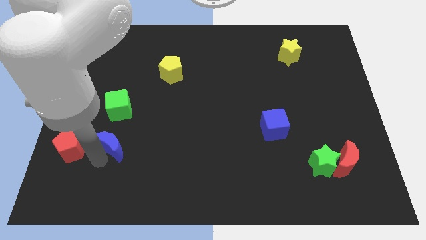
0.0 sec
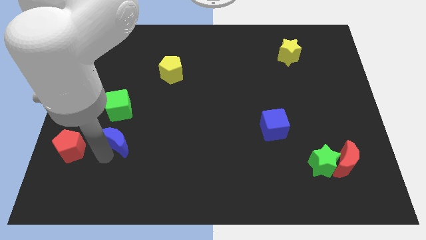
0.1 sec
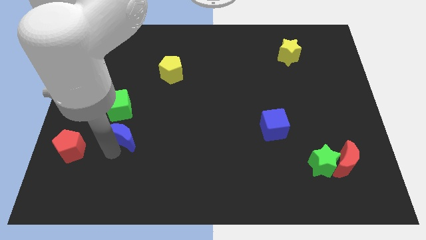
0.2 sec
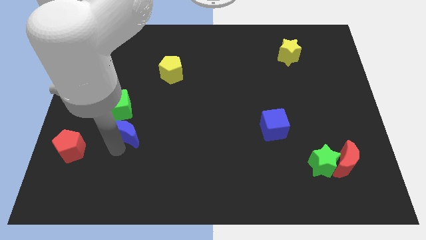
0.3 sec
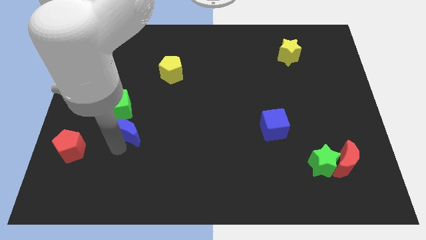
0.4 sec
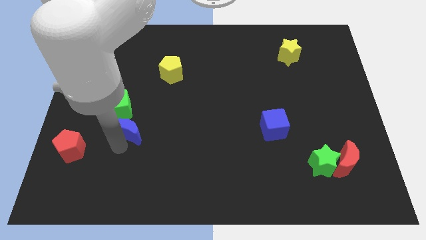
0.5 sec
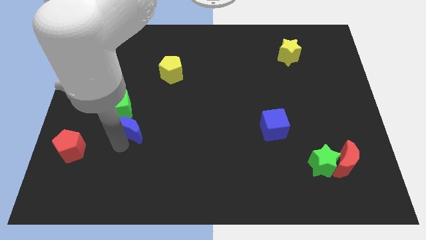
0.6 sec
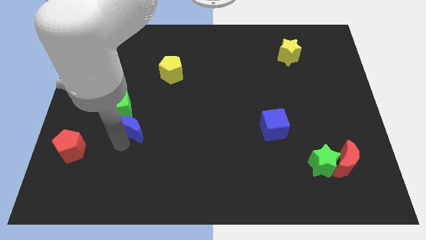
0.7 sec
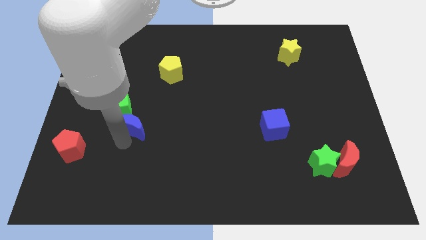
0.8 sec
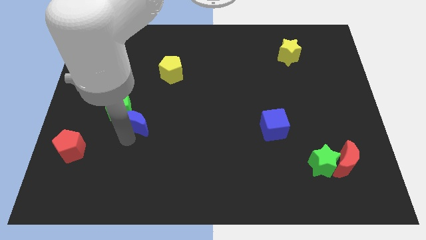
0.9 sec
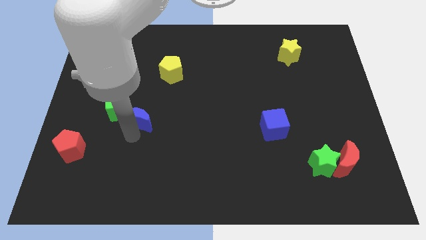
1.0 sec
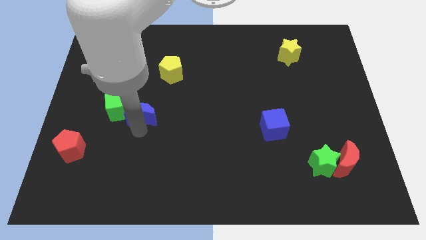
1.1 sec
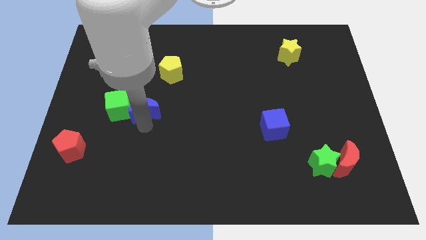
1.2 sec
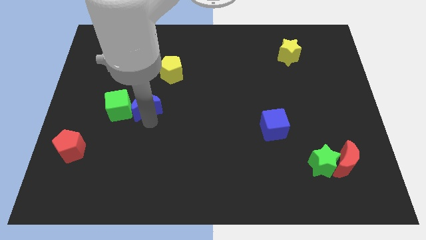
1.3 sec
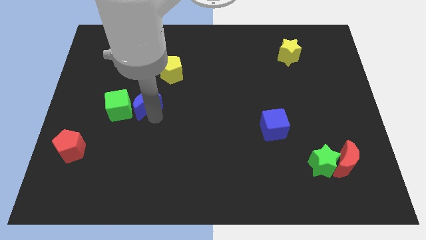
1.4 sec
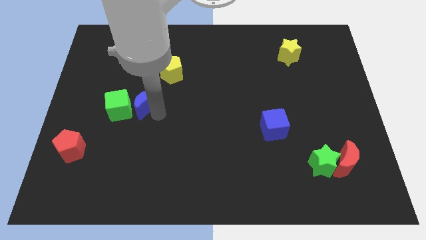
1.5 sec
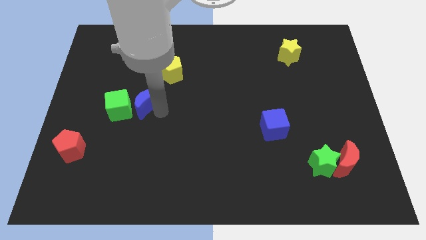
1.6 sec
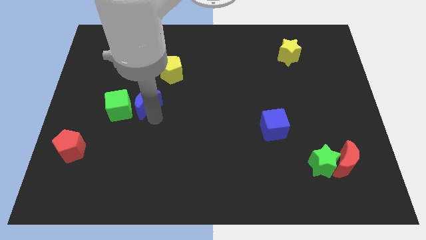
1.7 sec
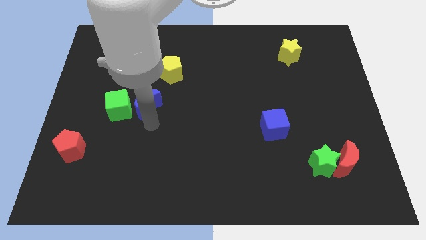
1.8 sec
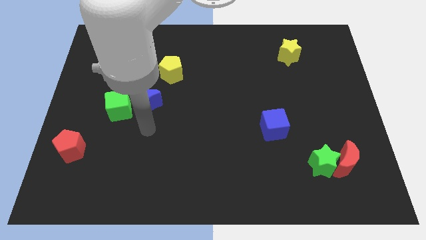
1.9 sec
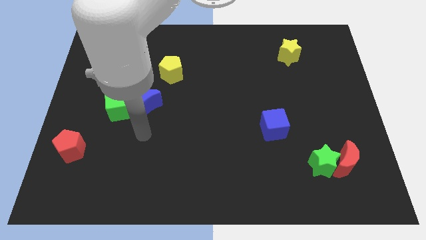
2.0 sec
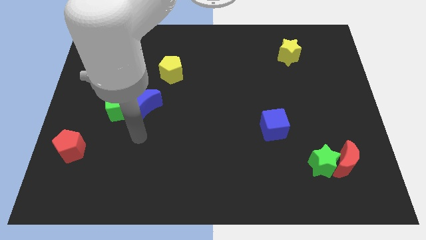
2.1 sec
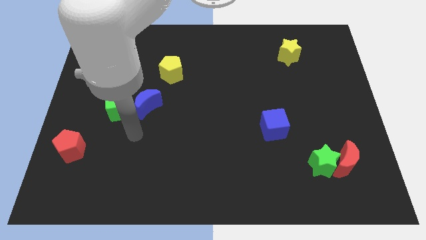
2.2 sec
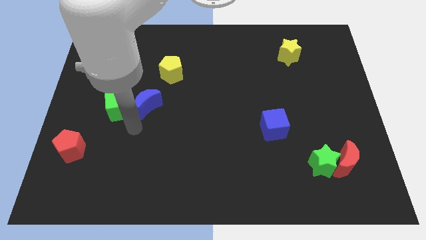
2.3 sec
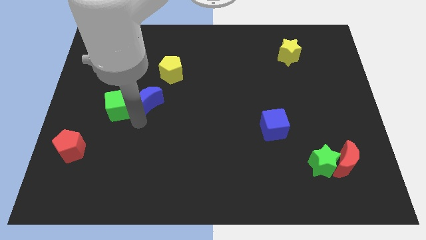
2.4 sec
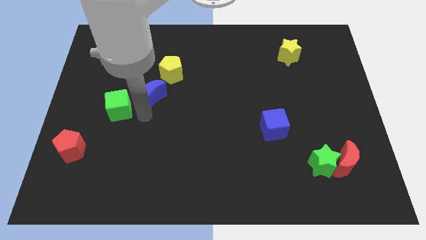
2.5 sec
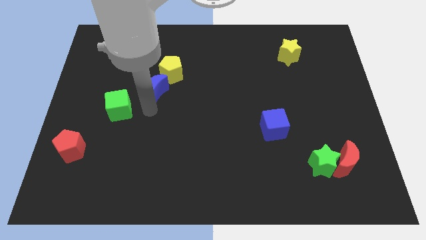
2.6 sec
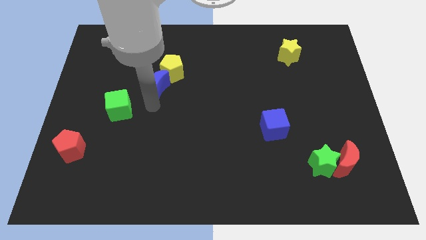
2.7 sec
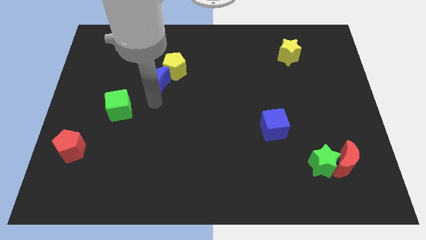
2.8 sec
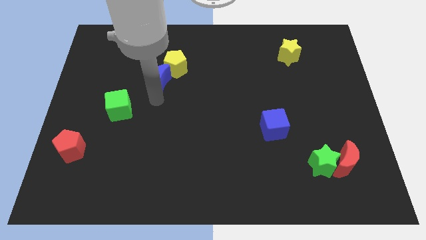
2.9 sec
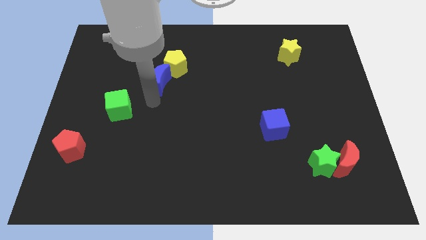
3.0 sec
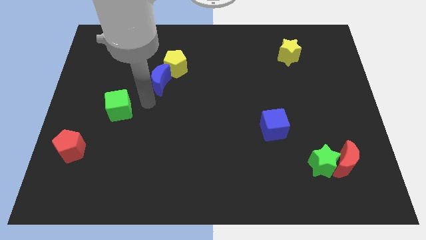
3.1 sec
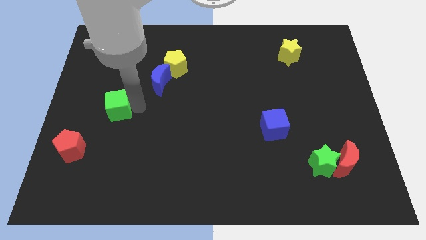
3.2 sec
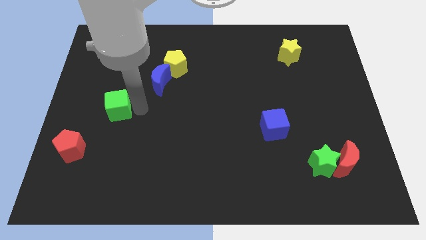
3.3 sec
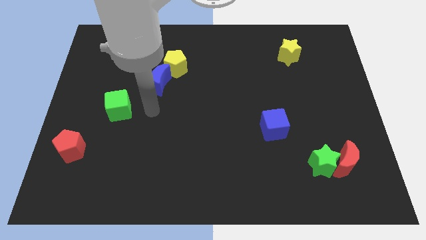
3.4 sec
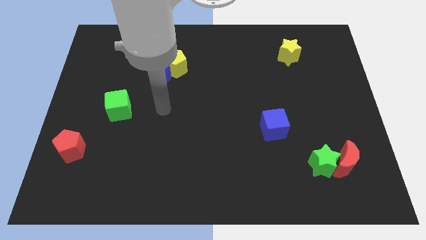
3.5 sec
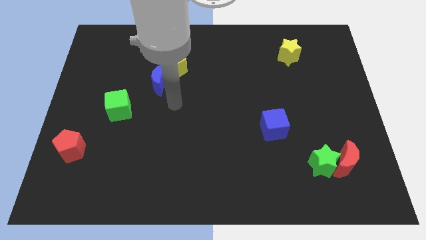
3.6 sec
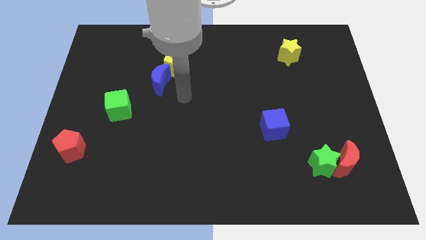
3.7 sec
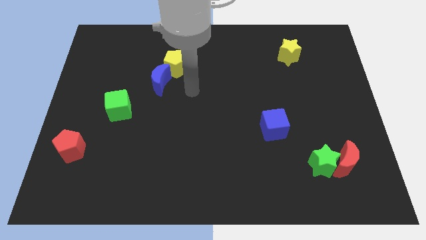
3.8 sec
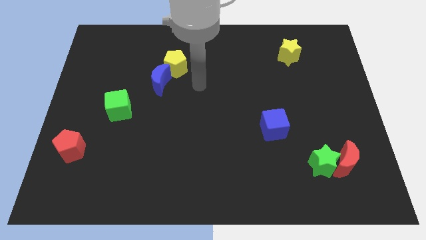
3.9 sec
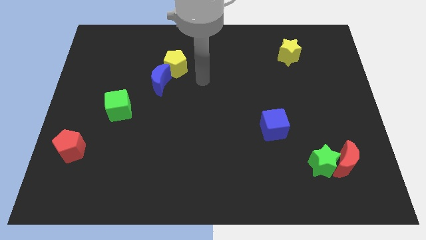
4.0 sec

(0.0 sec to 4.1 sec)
push blue moon in to yellow pentagon

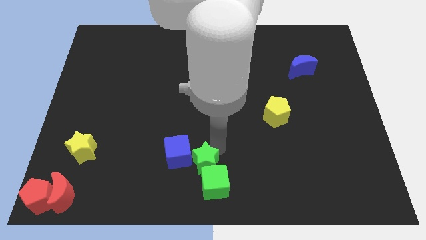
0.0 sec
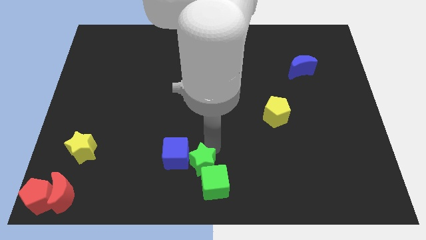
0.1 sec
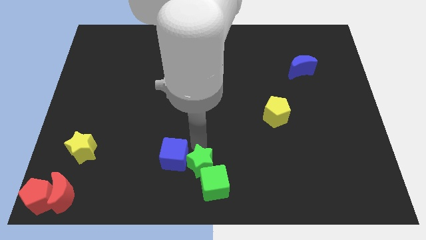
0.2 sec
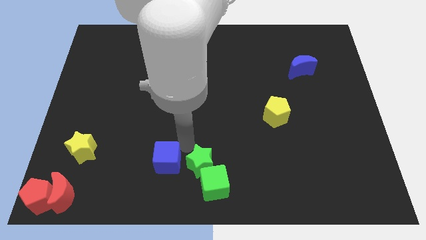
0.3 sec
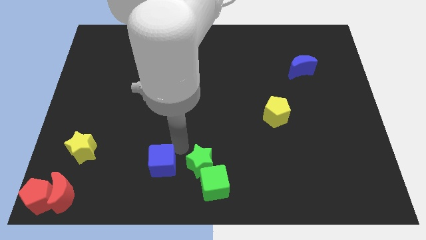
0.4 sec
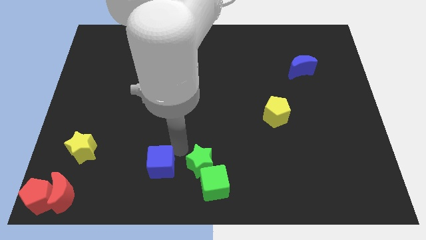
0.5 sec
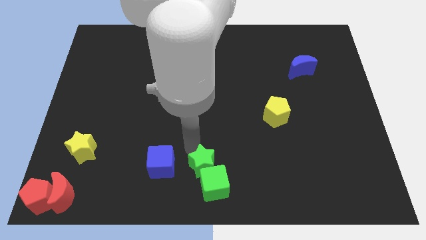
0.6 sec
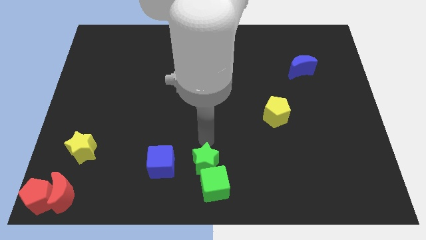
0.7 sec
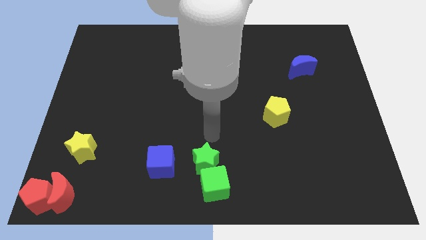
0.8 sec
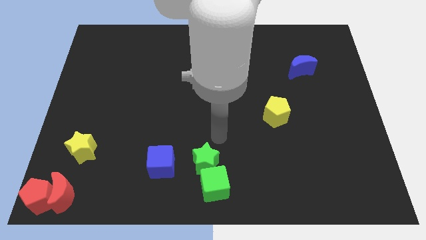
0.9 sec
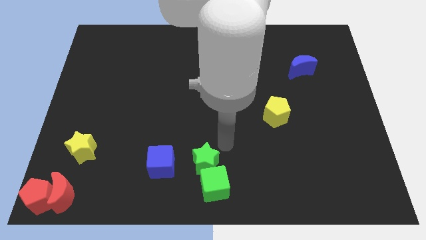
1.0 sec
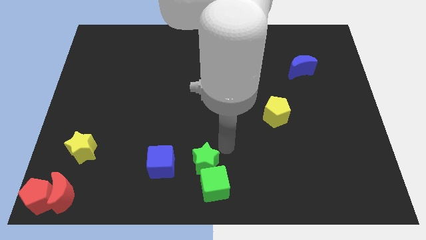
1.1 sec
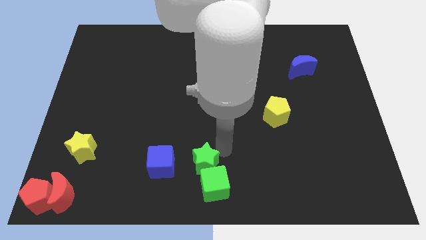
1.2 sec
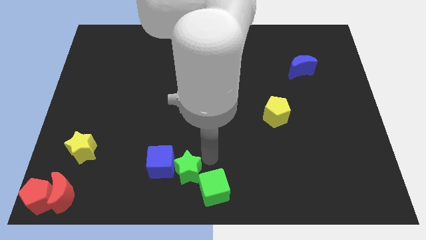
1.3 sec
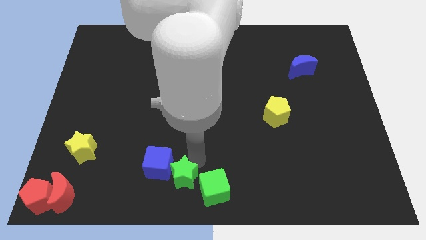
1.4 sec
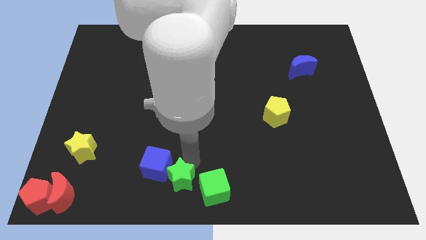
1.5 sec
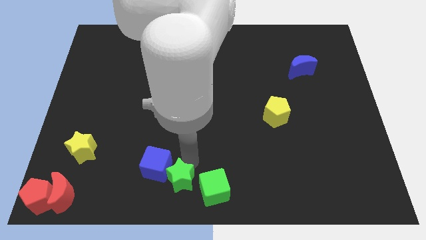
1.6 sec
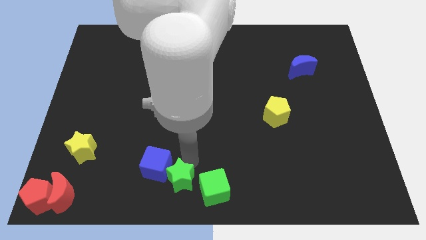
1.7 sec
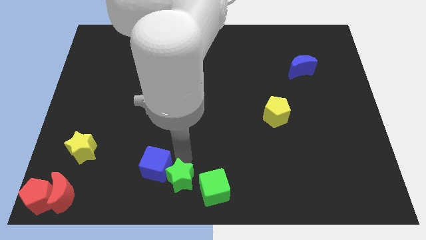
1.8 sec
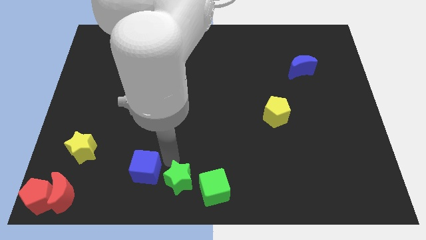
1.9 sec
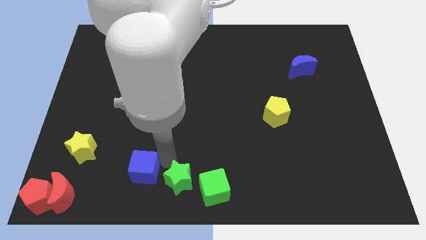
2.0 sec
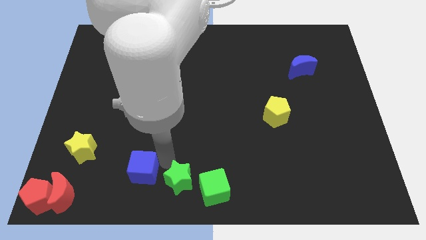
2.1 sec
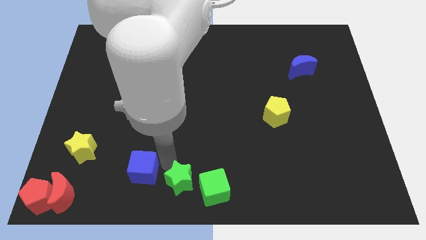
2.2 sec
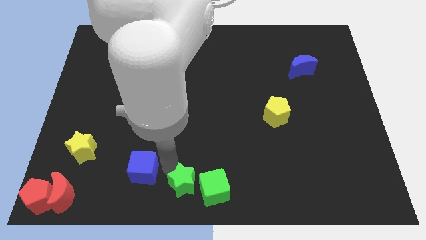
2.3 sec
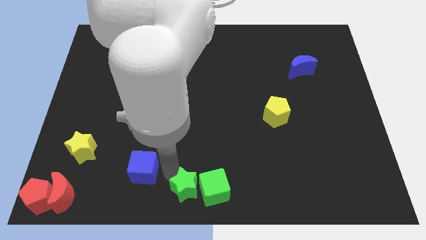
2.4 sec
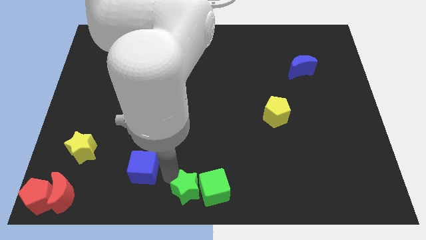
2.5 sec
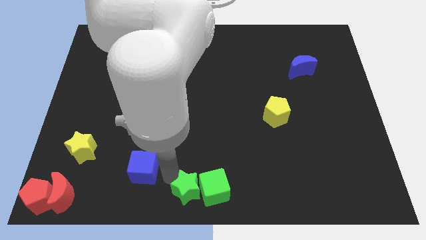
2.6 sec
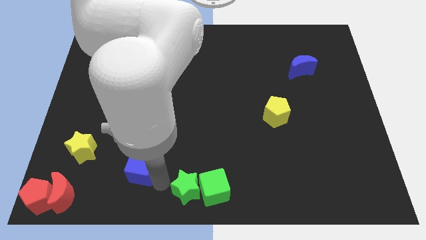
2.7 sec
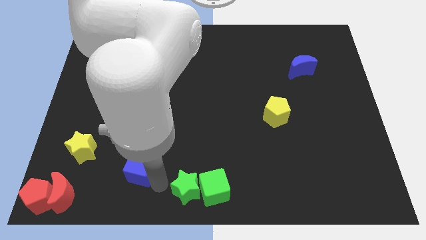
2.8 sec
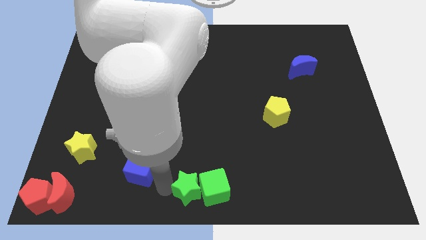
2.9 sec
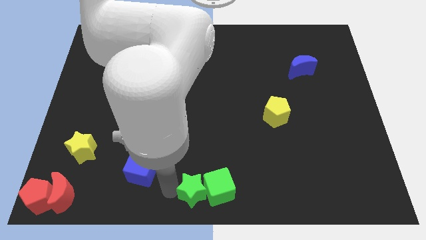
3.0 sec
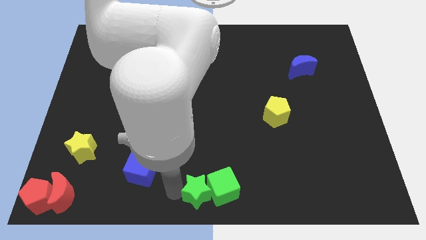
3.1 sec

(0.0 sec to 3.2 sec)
place green star beside green cube

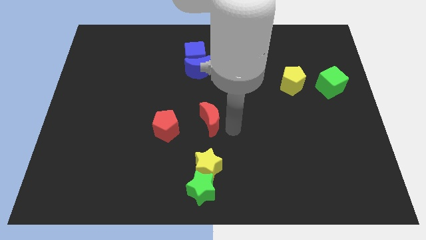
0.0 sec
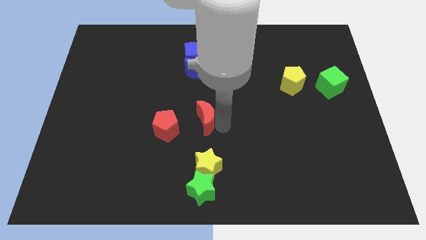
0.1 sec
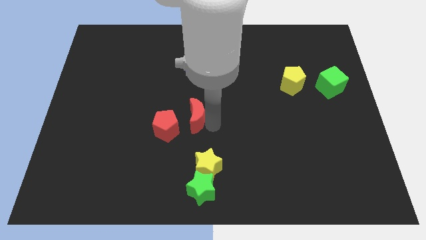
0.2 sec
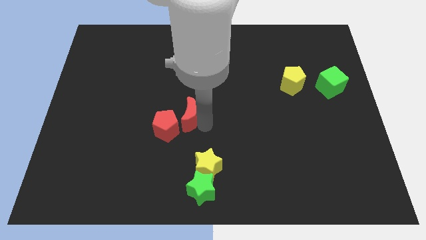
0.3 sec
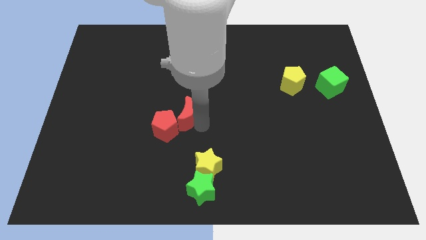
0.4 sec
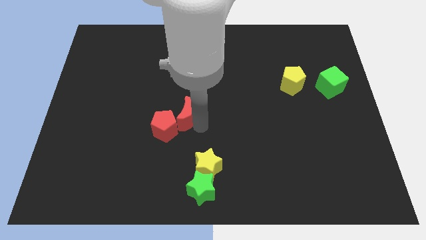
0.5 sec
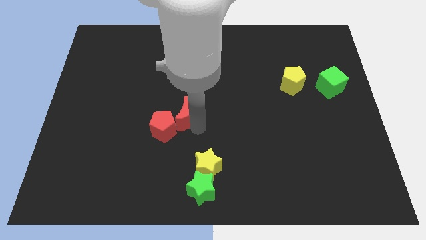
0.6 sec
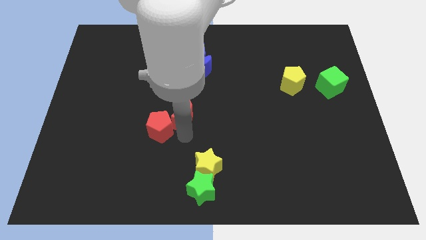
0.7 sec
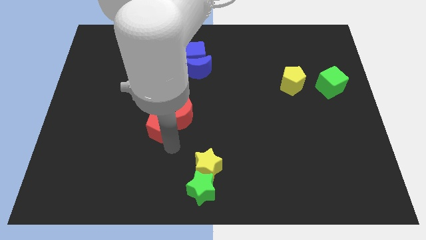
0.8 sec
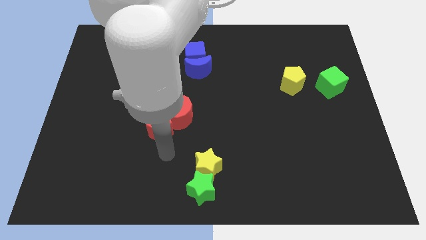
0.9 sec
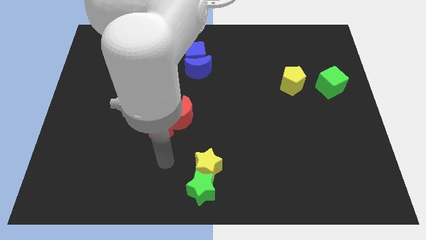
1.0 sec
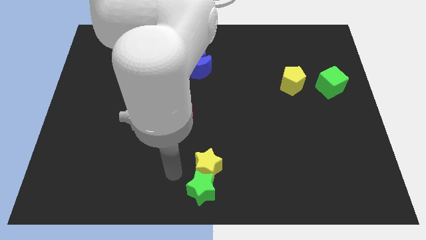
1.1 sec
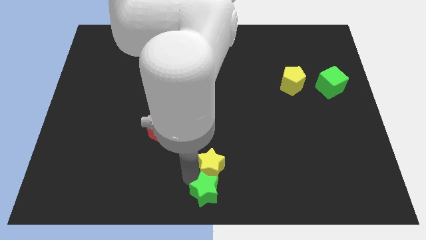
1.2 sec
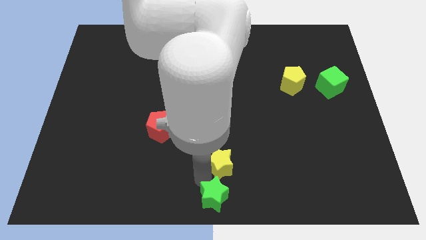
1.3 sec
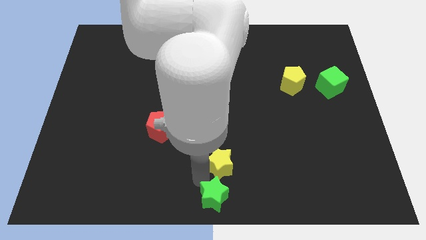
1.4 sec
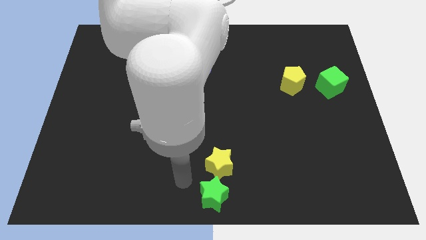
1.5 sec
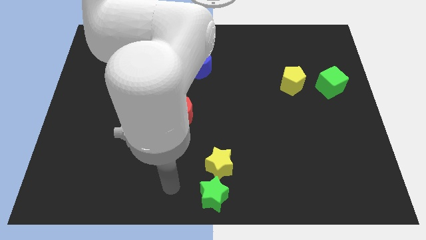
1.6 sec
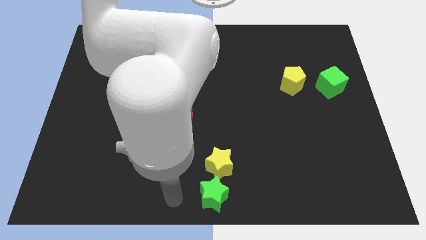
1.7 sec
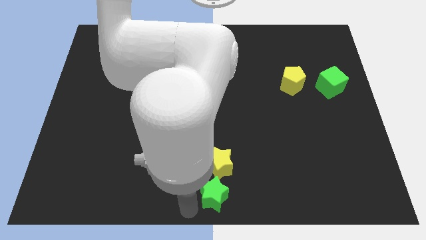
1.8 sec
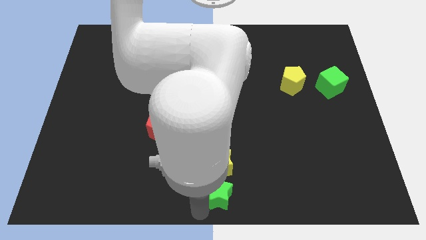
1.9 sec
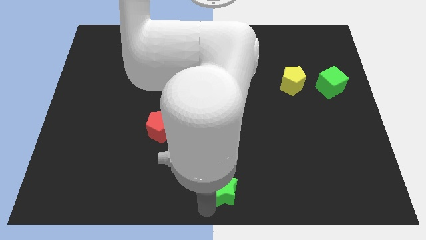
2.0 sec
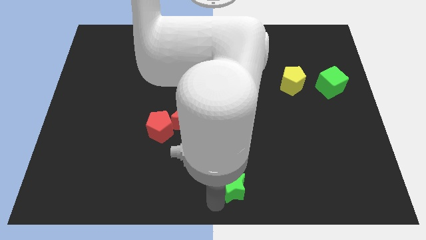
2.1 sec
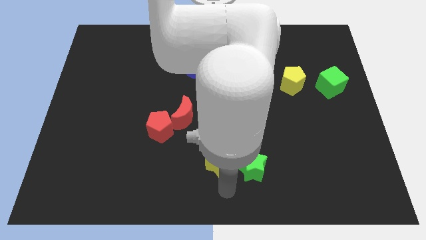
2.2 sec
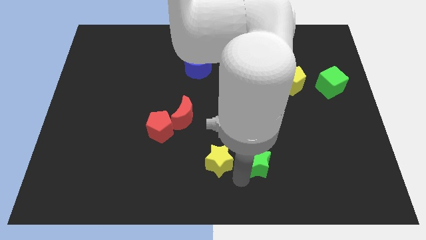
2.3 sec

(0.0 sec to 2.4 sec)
push green star beside yellow star
